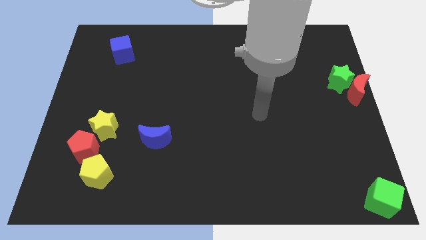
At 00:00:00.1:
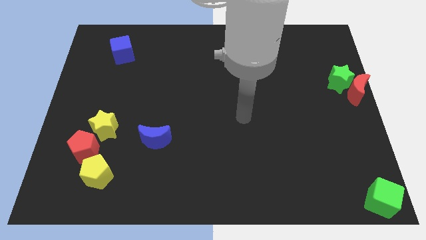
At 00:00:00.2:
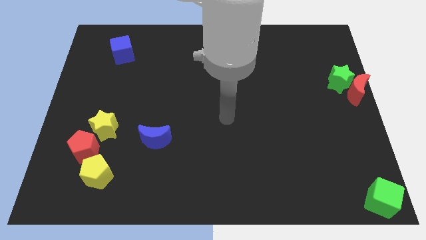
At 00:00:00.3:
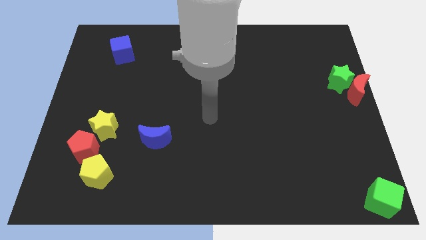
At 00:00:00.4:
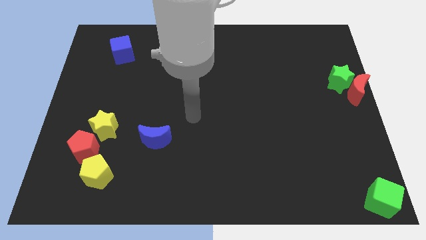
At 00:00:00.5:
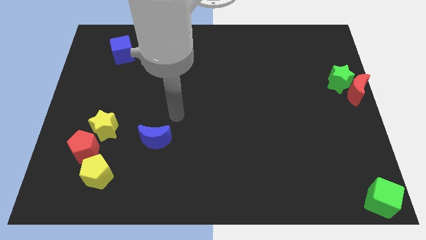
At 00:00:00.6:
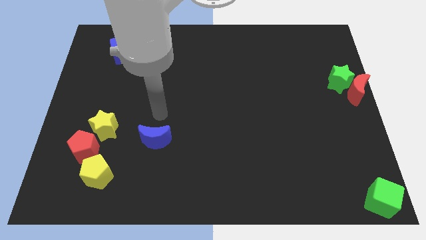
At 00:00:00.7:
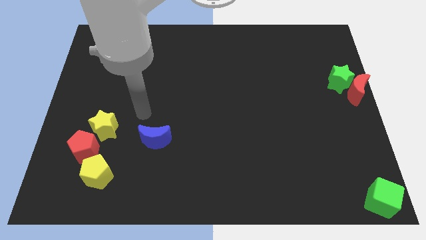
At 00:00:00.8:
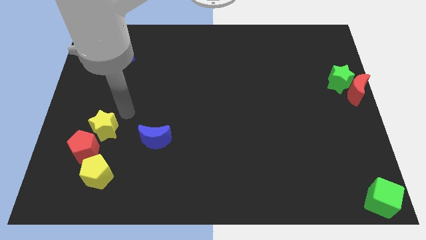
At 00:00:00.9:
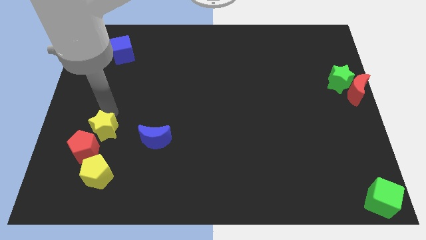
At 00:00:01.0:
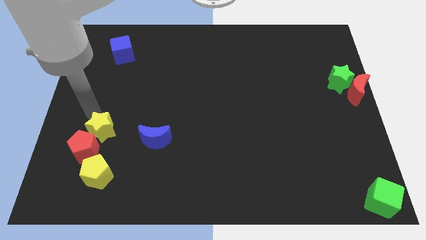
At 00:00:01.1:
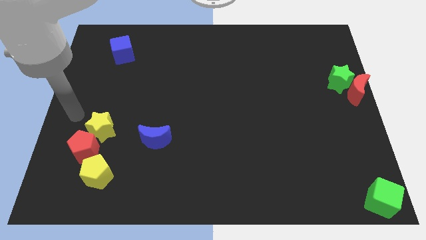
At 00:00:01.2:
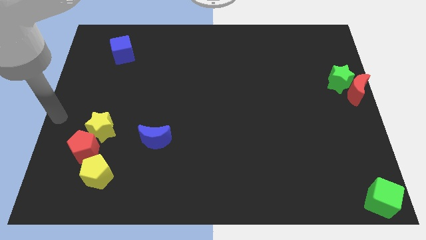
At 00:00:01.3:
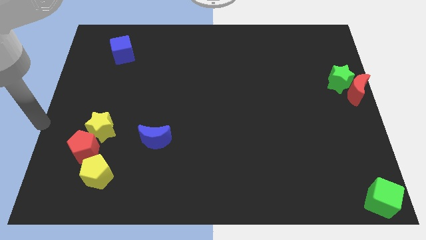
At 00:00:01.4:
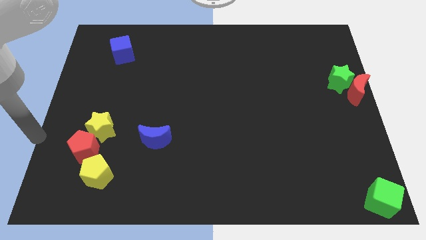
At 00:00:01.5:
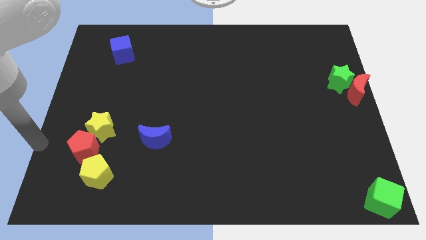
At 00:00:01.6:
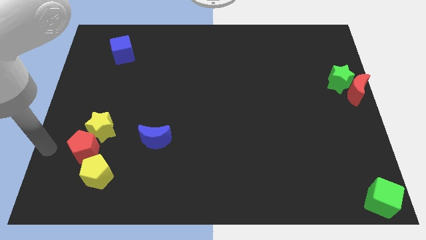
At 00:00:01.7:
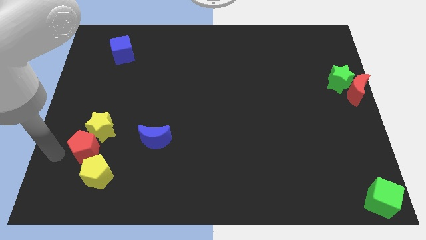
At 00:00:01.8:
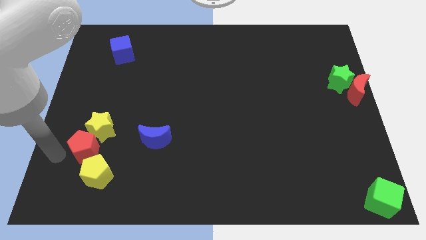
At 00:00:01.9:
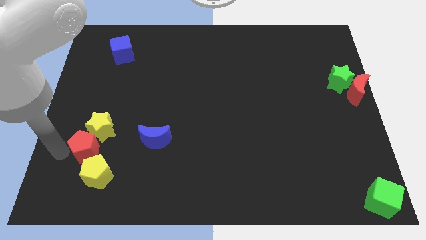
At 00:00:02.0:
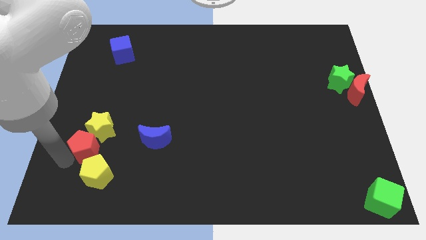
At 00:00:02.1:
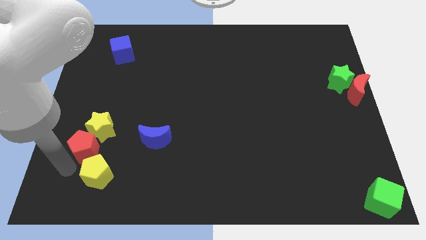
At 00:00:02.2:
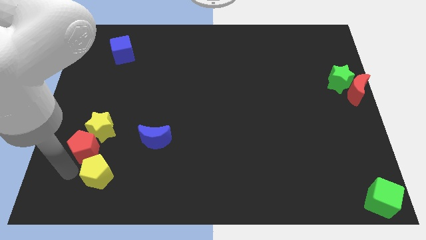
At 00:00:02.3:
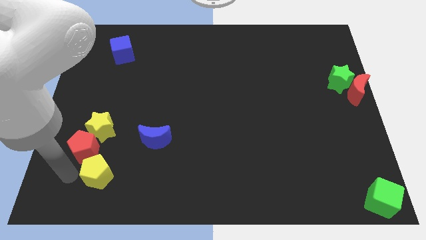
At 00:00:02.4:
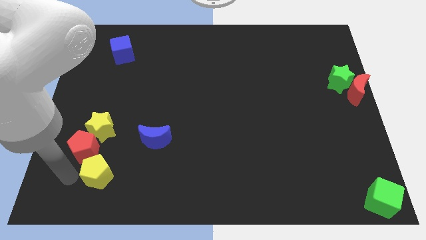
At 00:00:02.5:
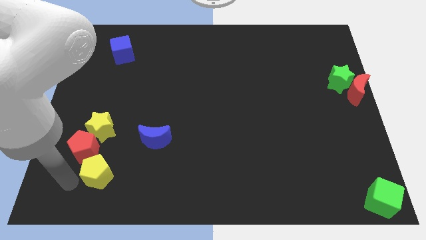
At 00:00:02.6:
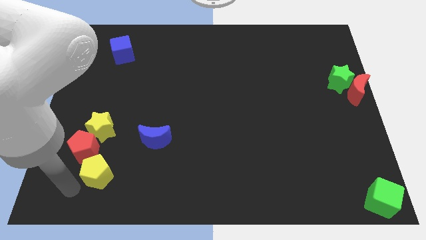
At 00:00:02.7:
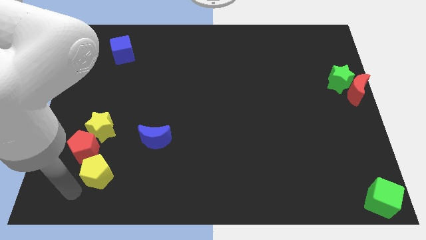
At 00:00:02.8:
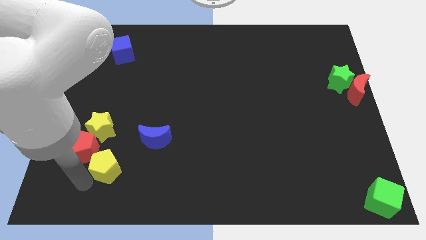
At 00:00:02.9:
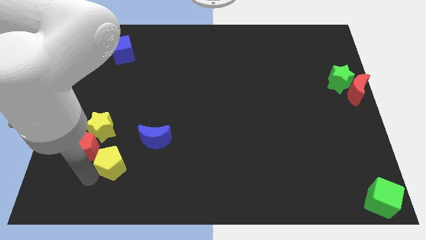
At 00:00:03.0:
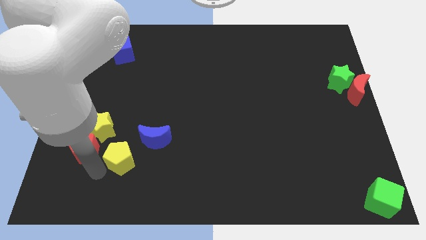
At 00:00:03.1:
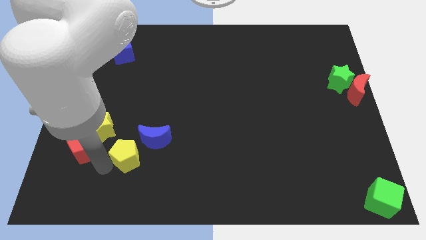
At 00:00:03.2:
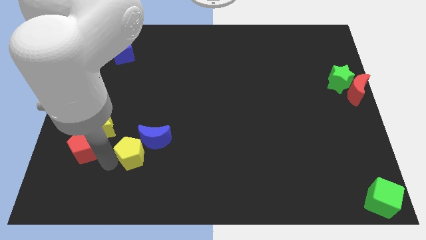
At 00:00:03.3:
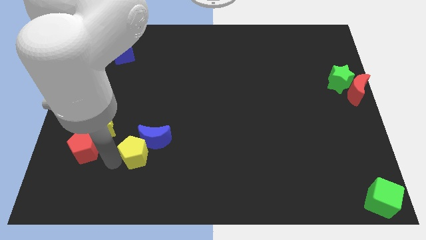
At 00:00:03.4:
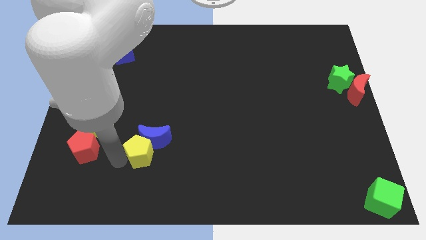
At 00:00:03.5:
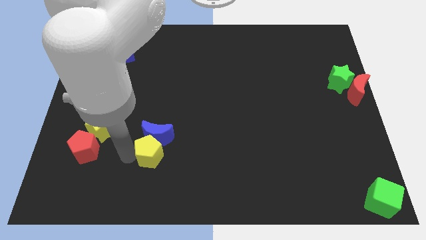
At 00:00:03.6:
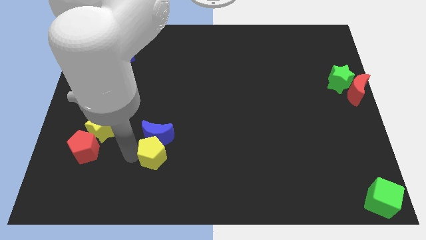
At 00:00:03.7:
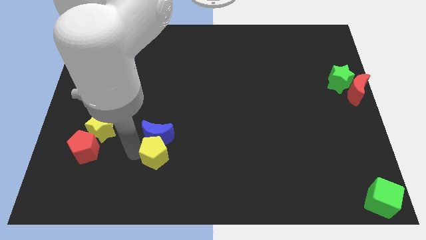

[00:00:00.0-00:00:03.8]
push yellow pentagon into the blue crescent

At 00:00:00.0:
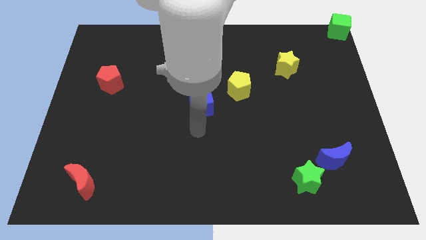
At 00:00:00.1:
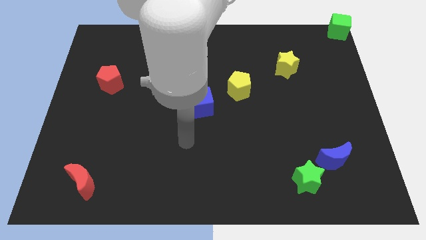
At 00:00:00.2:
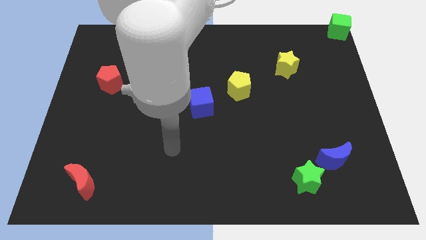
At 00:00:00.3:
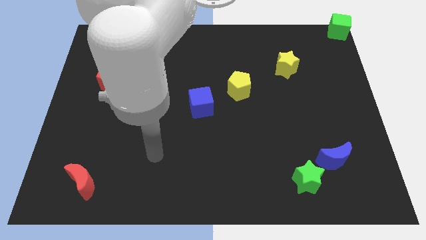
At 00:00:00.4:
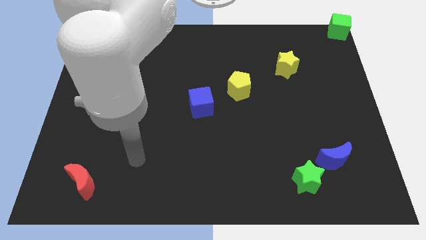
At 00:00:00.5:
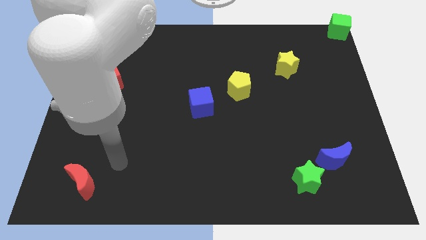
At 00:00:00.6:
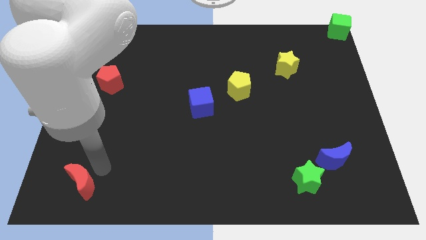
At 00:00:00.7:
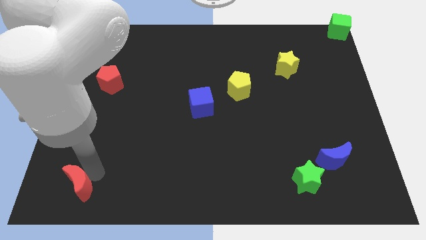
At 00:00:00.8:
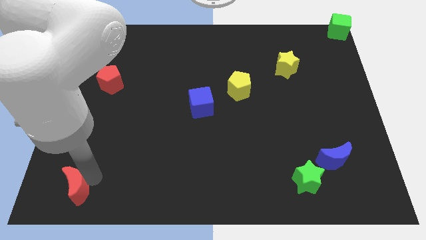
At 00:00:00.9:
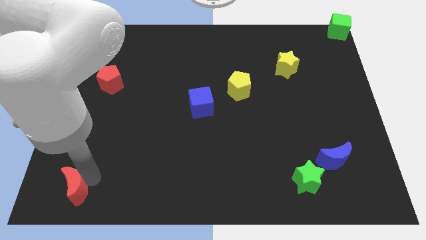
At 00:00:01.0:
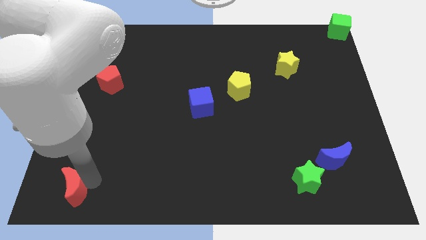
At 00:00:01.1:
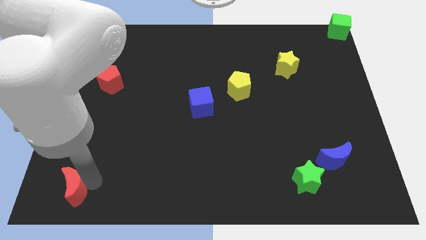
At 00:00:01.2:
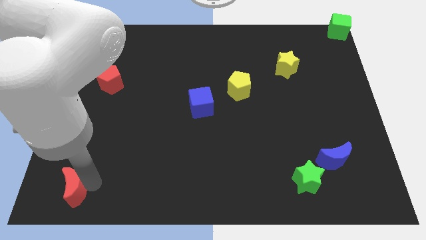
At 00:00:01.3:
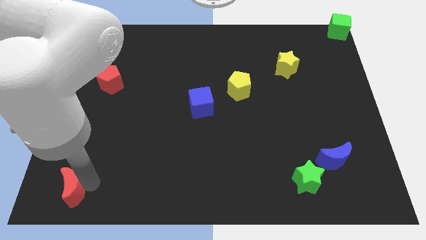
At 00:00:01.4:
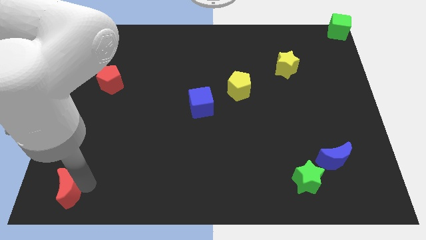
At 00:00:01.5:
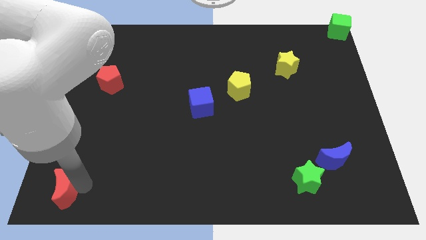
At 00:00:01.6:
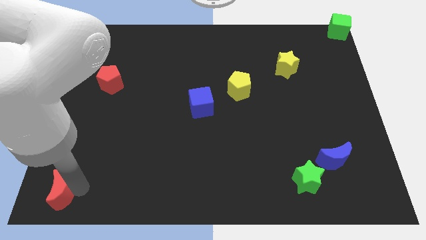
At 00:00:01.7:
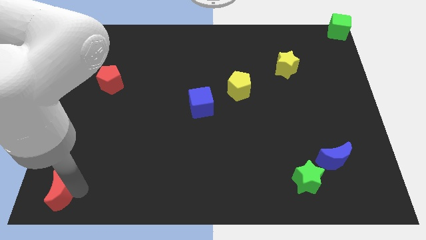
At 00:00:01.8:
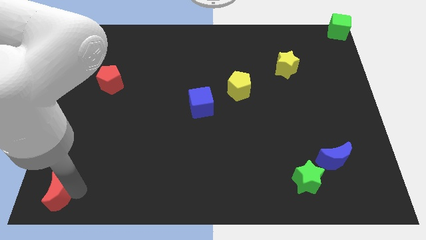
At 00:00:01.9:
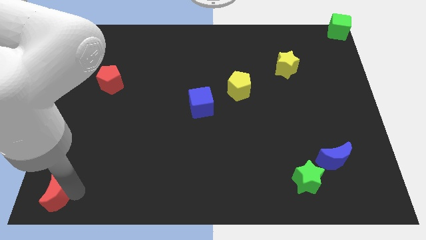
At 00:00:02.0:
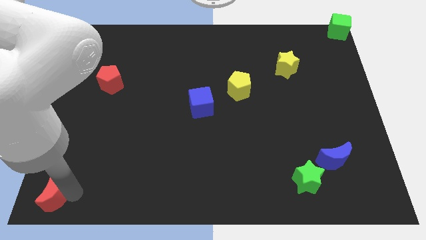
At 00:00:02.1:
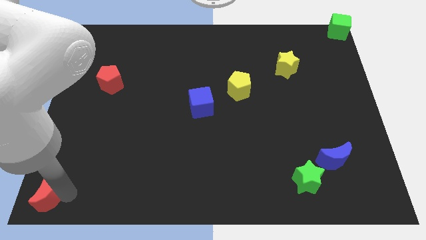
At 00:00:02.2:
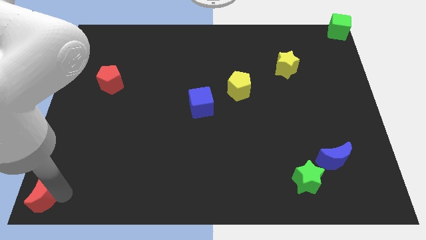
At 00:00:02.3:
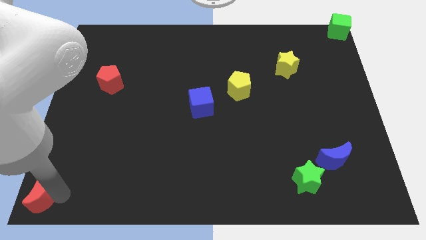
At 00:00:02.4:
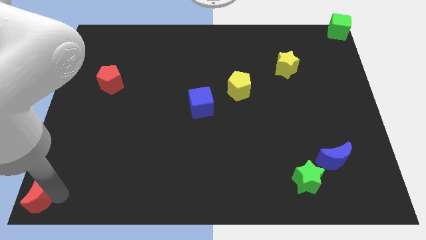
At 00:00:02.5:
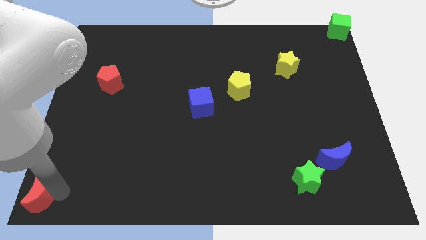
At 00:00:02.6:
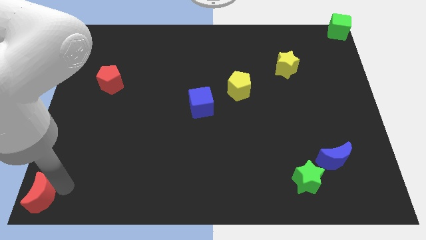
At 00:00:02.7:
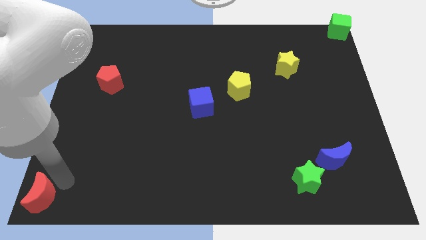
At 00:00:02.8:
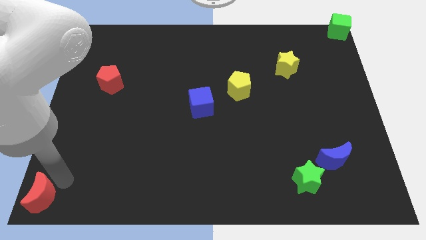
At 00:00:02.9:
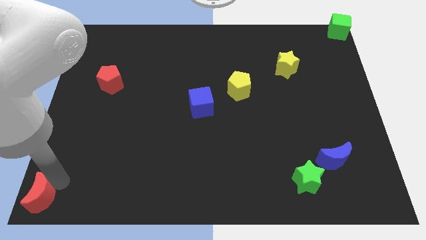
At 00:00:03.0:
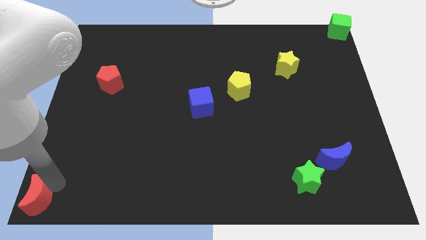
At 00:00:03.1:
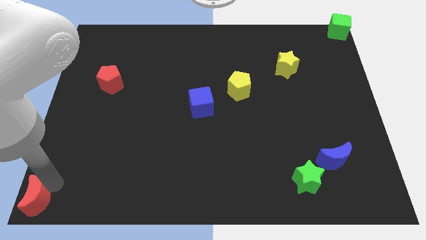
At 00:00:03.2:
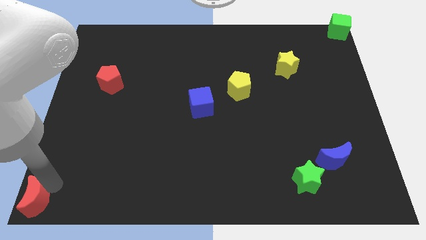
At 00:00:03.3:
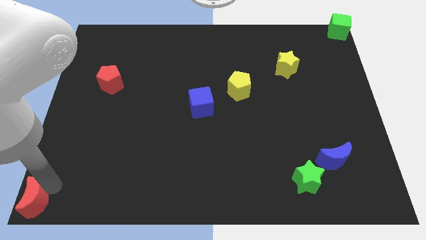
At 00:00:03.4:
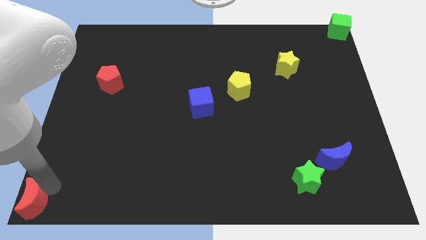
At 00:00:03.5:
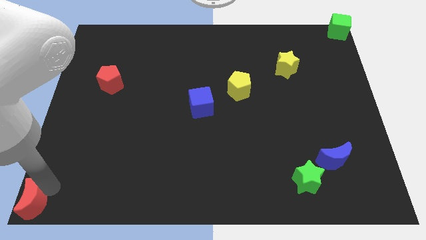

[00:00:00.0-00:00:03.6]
place the red crescent at the bottom left corner of the board

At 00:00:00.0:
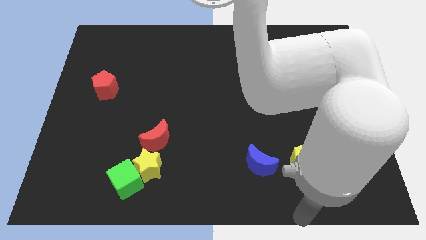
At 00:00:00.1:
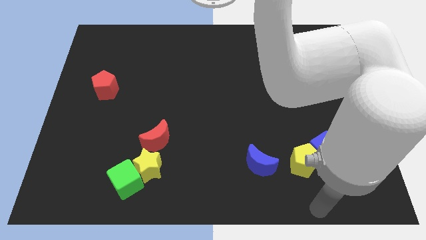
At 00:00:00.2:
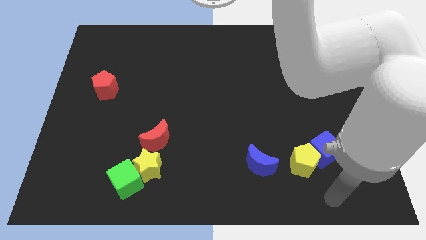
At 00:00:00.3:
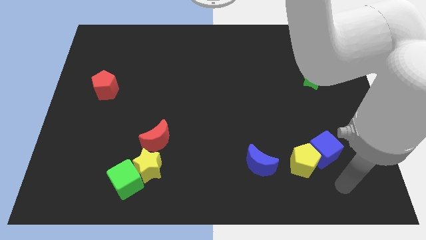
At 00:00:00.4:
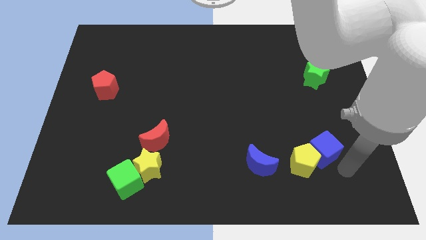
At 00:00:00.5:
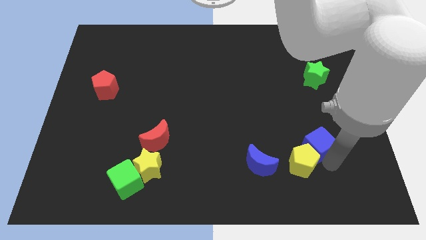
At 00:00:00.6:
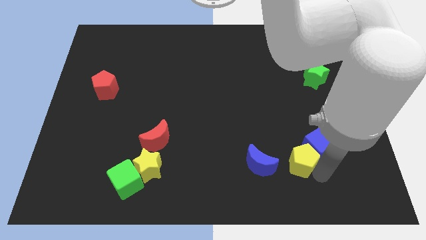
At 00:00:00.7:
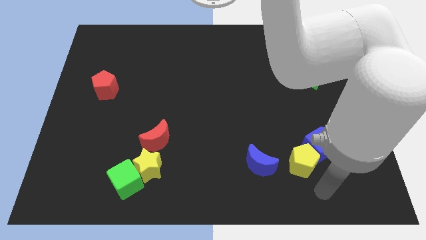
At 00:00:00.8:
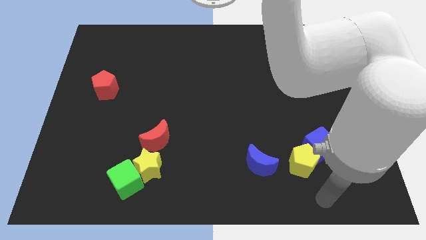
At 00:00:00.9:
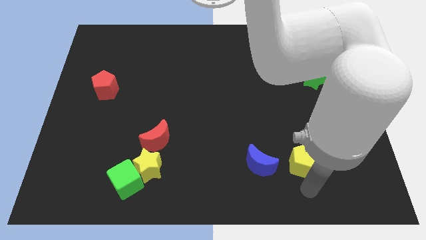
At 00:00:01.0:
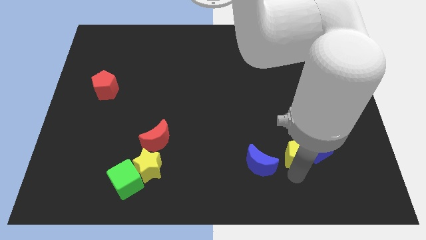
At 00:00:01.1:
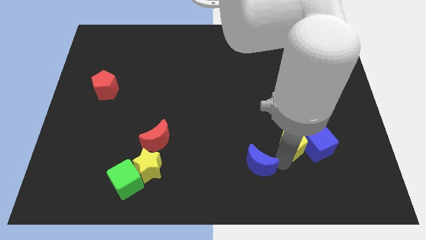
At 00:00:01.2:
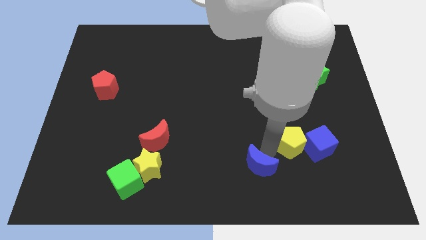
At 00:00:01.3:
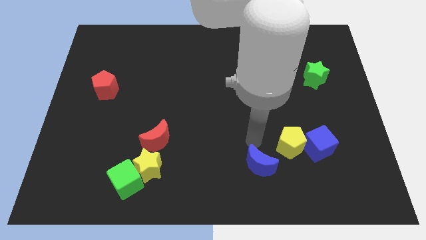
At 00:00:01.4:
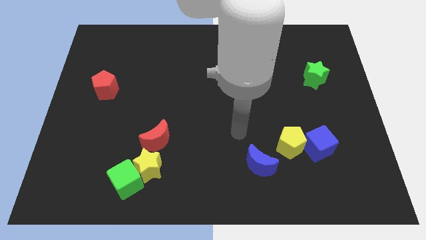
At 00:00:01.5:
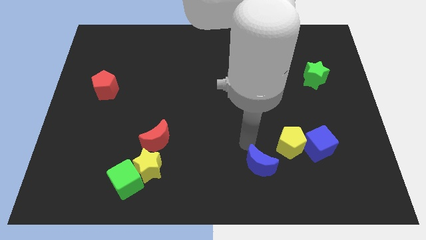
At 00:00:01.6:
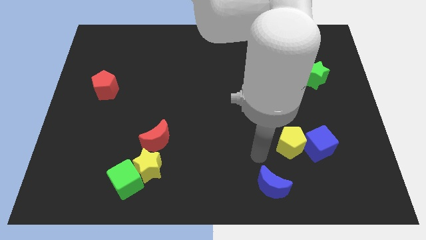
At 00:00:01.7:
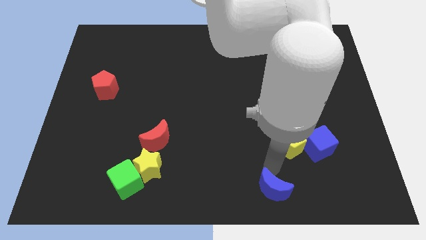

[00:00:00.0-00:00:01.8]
move the yellow pentagon slightly up
